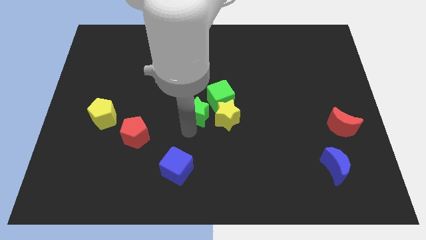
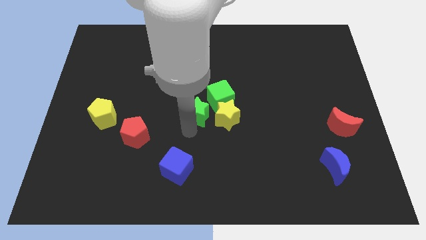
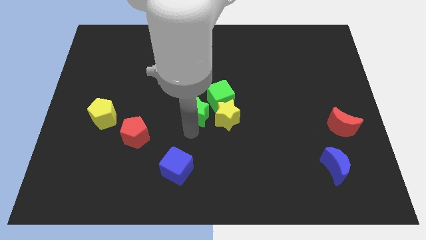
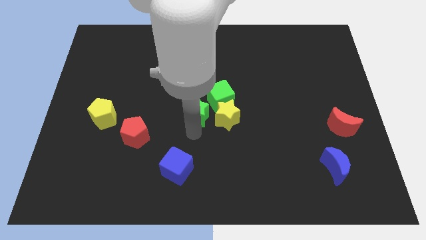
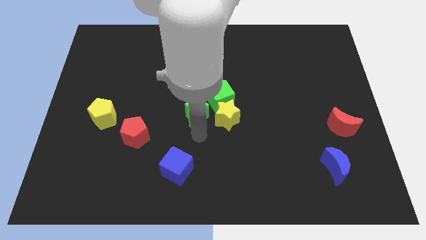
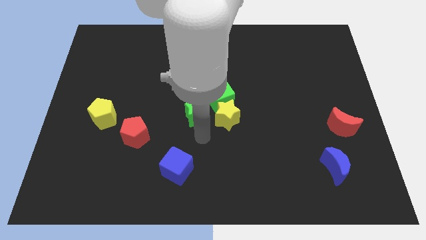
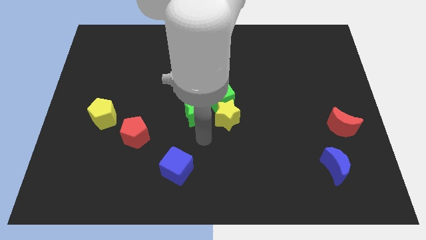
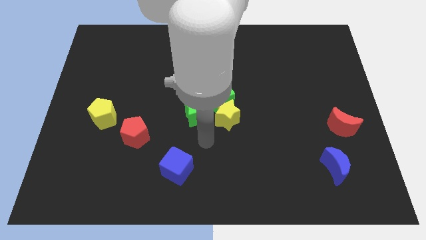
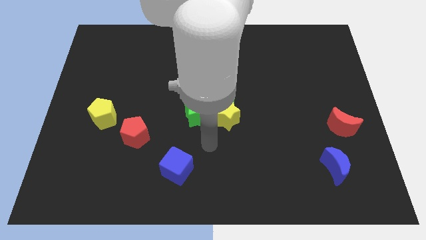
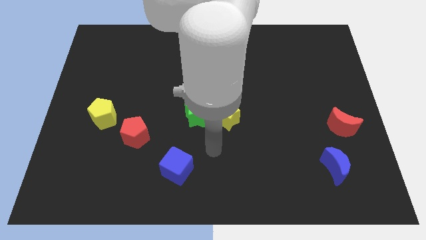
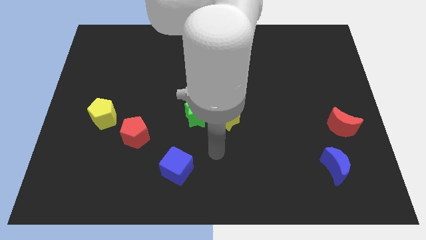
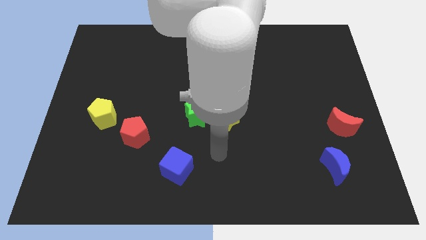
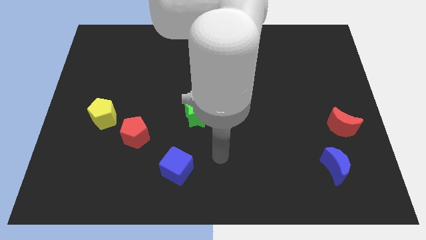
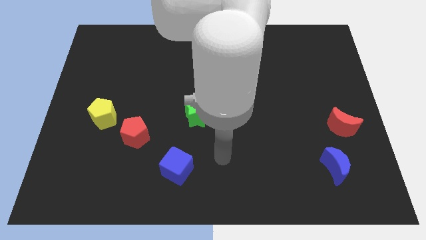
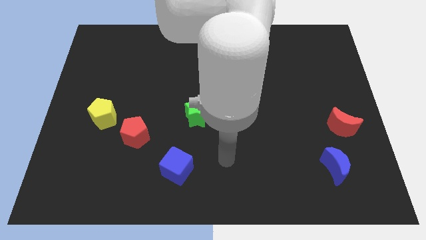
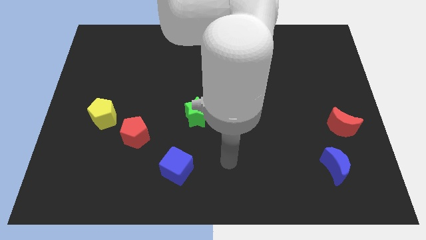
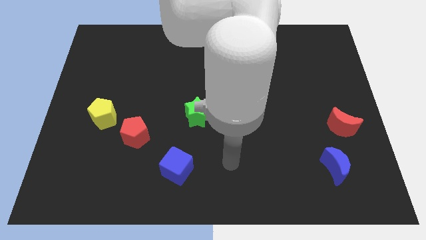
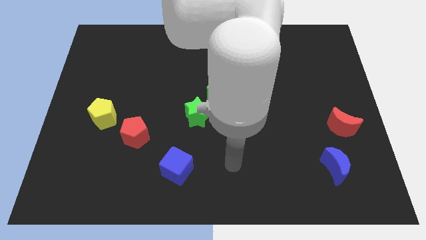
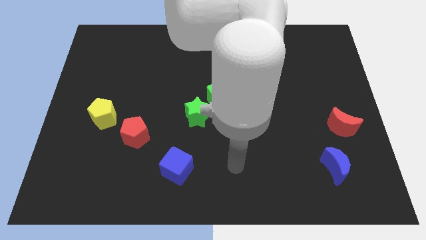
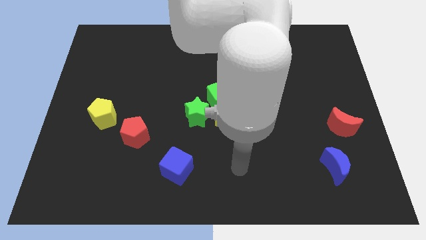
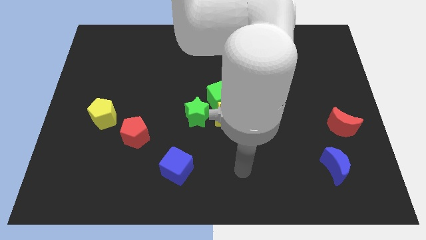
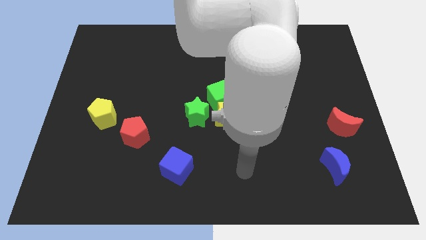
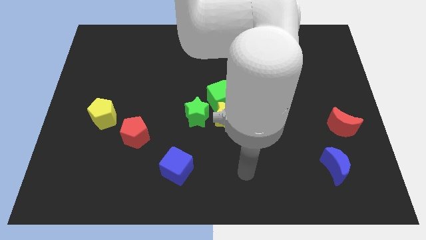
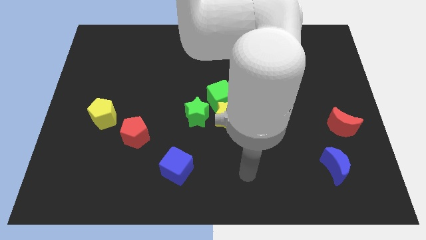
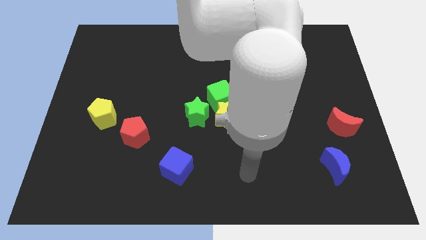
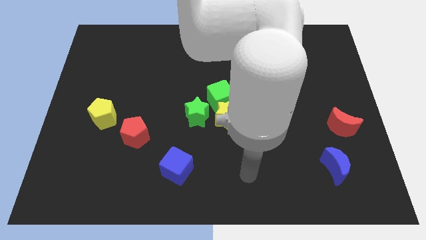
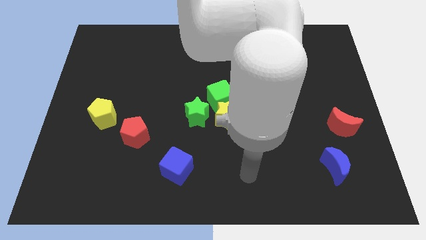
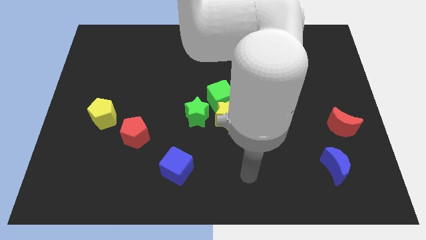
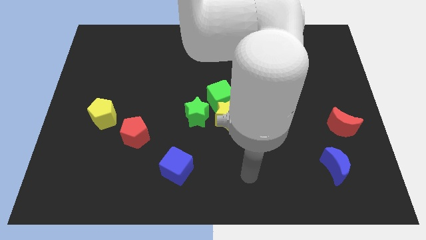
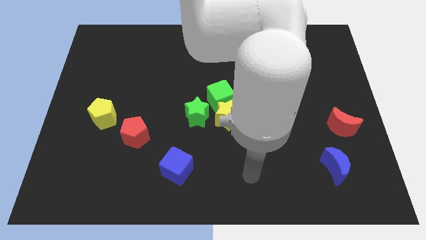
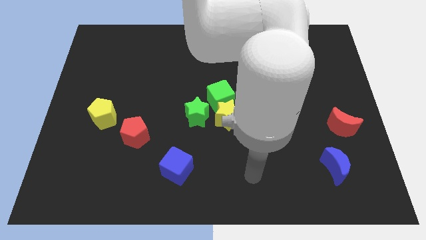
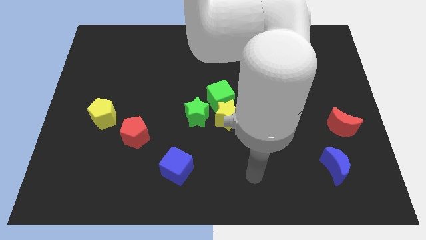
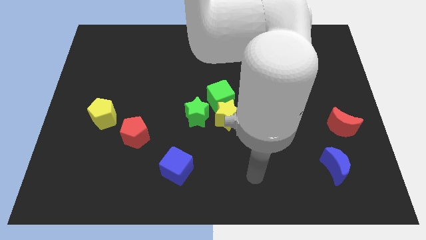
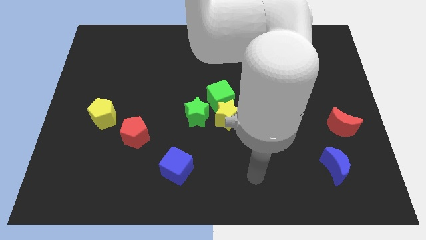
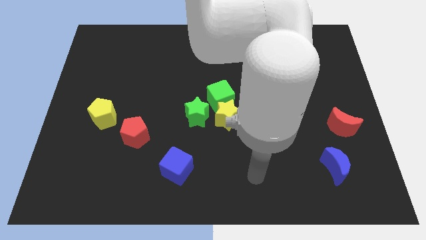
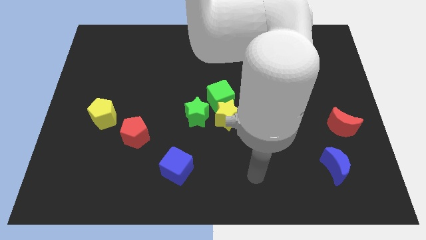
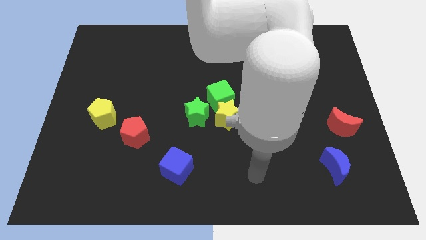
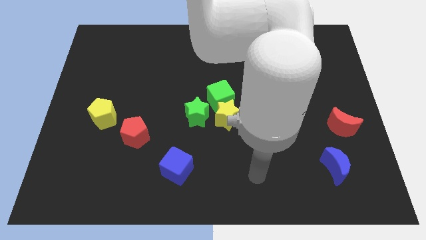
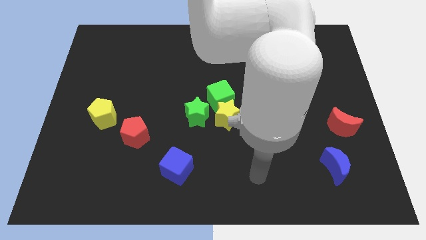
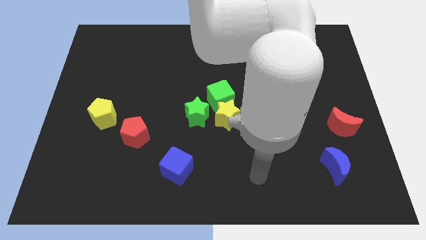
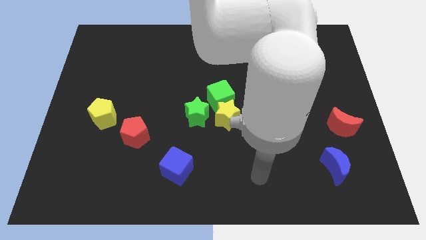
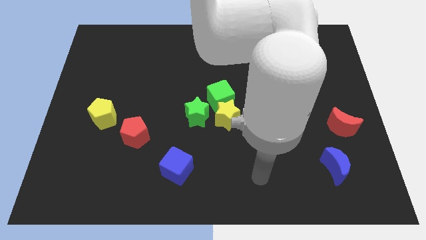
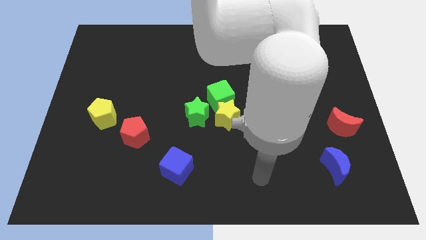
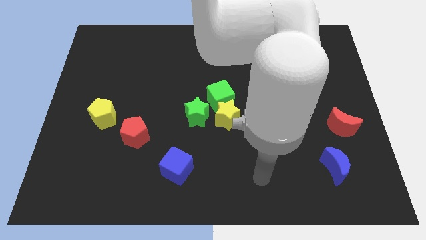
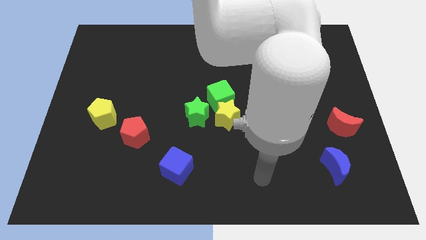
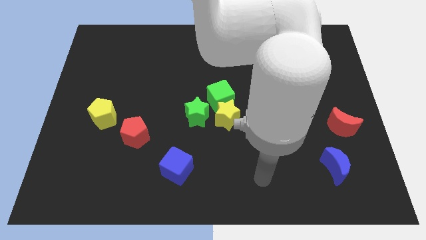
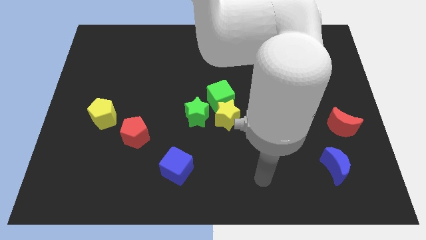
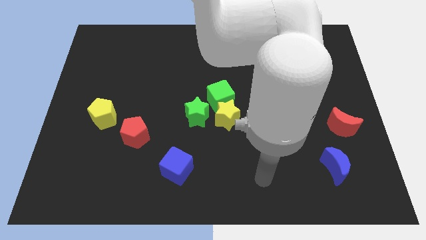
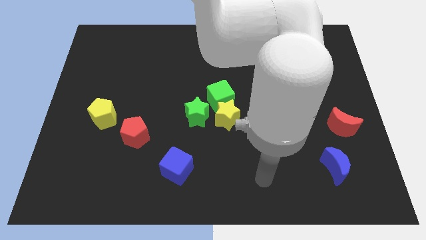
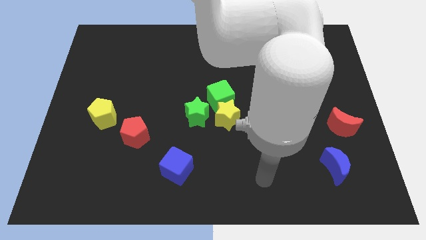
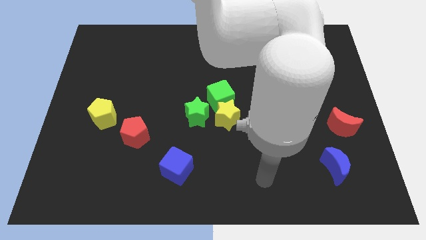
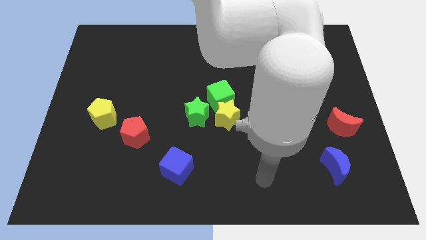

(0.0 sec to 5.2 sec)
move your arm away from the green star

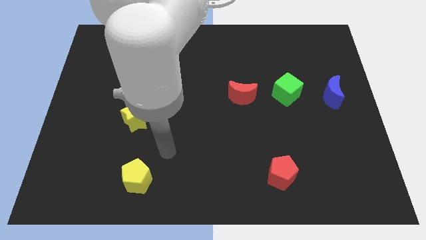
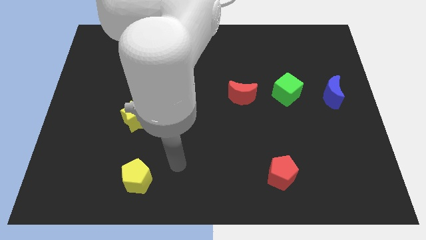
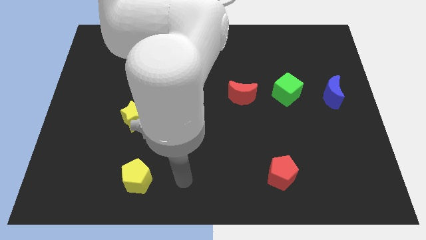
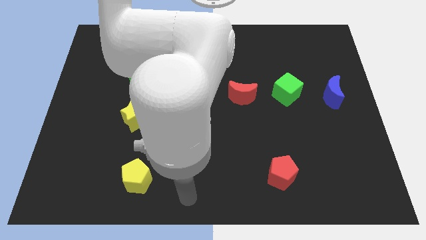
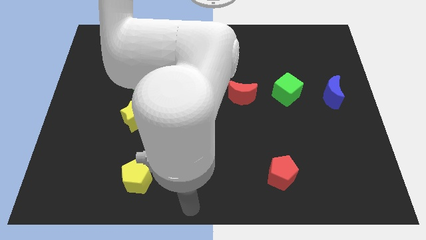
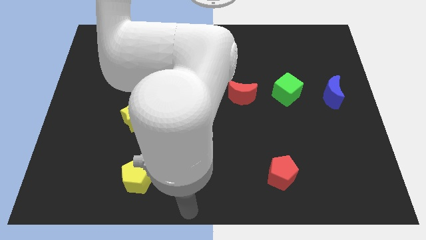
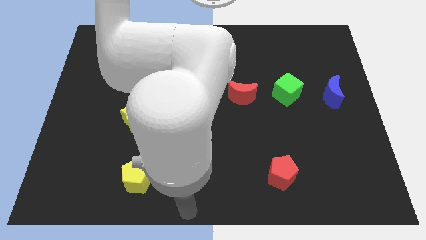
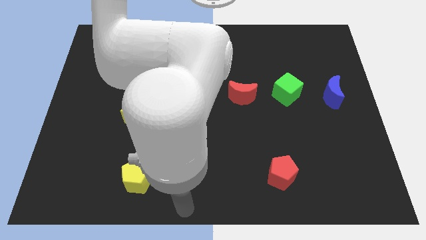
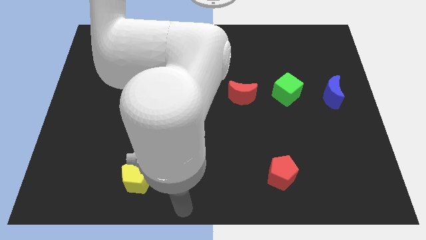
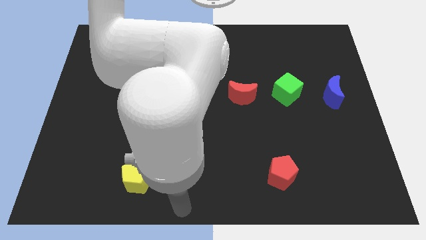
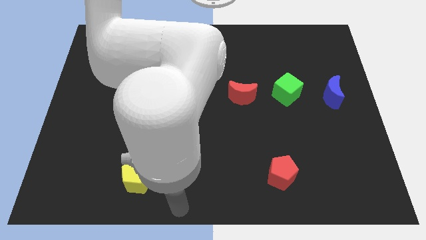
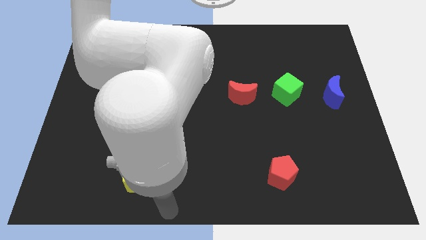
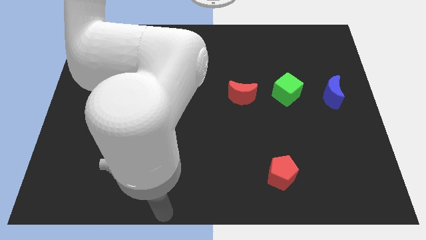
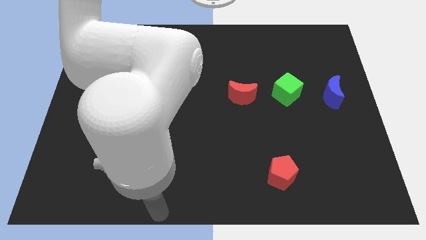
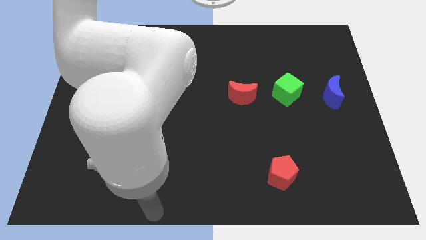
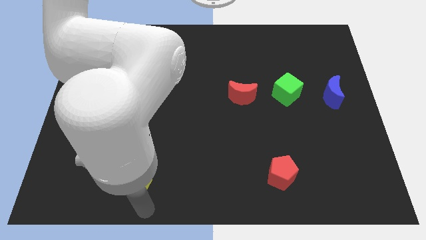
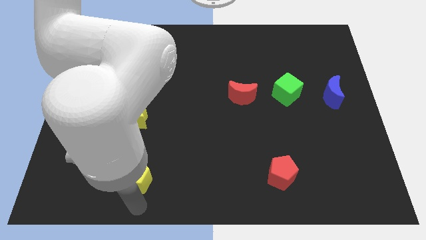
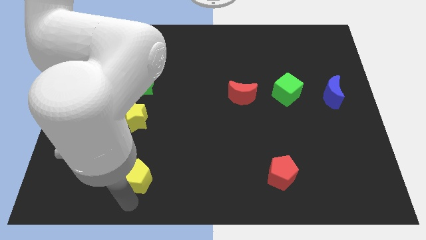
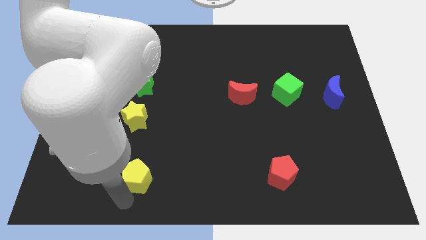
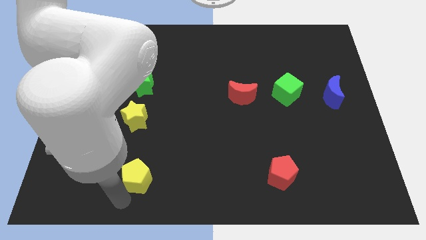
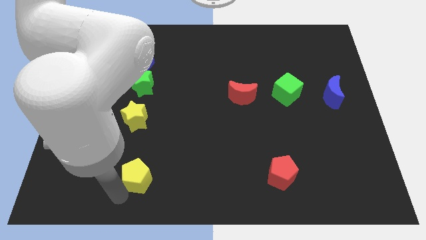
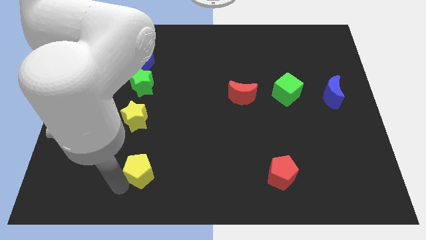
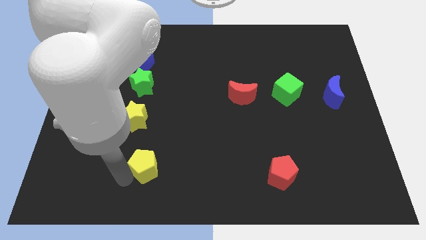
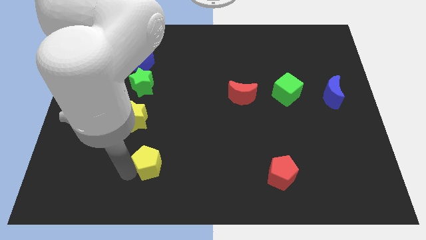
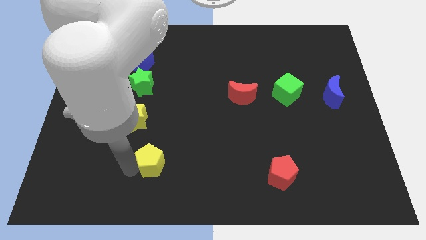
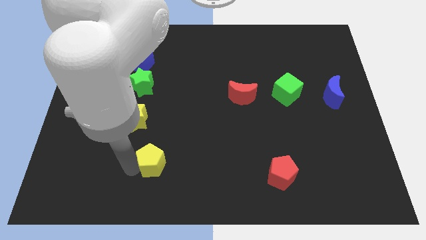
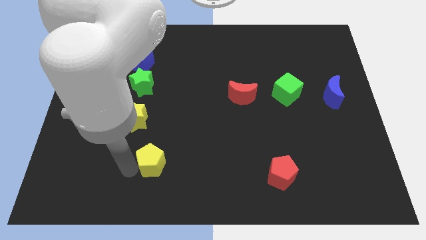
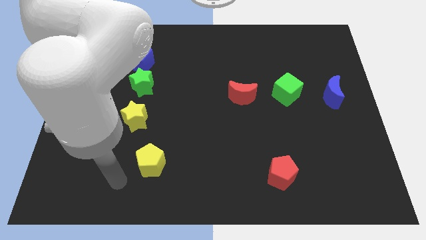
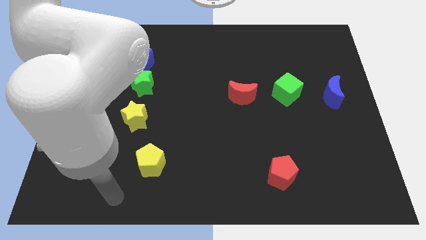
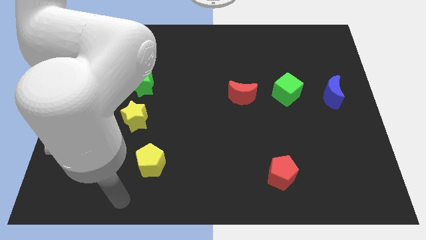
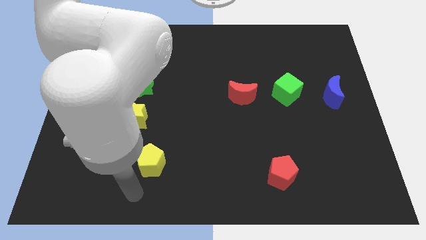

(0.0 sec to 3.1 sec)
slide yellow pentagon slightly upwards

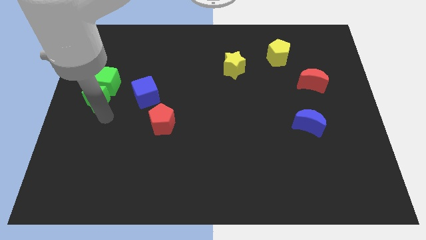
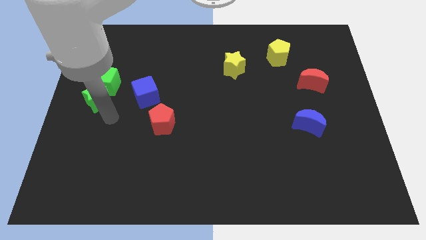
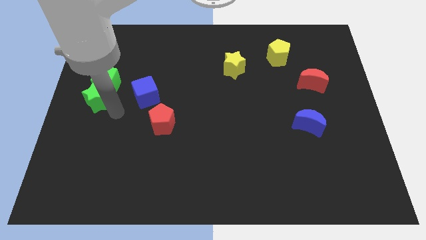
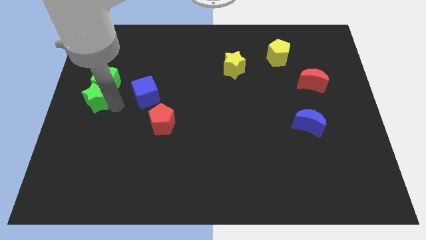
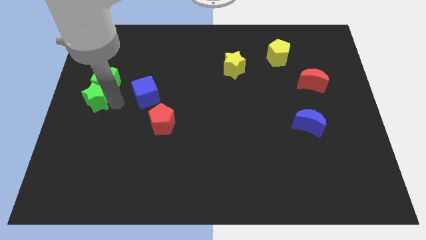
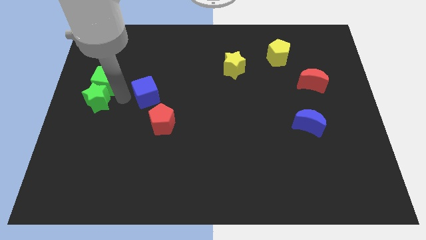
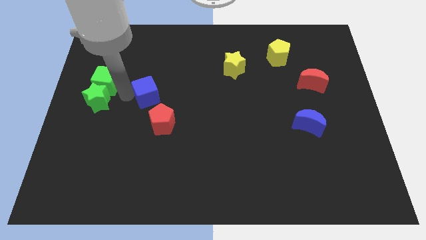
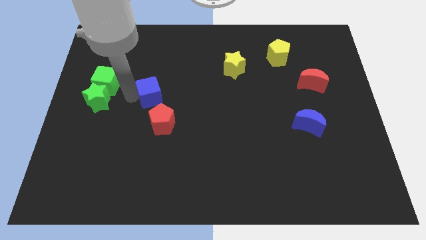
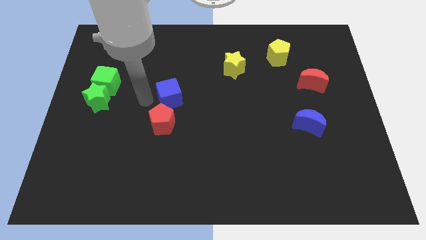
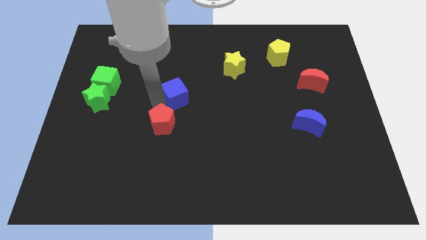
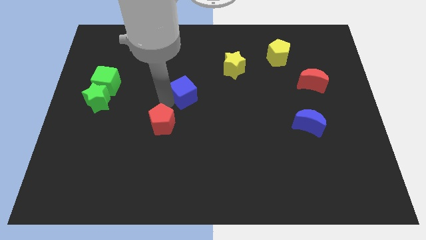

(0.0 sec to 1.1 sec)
move the blue cube diagonally bottom left to the yellow star
